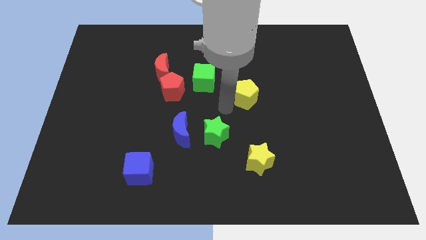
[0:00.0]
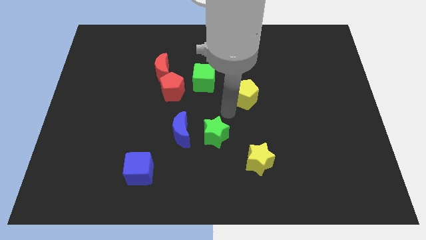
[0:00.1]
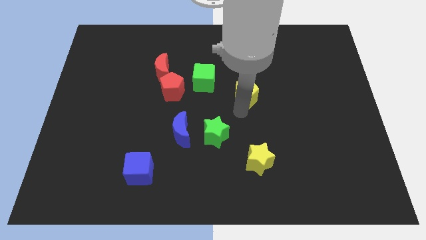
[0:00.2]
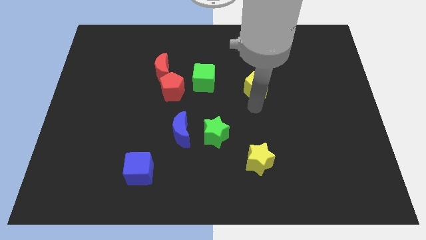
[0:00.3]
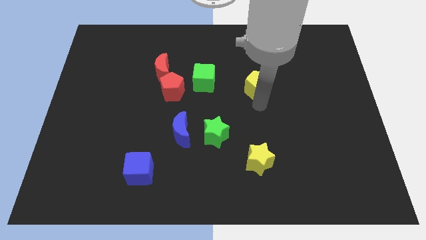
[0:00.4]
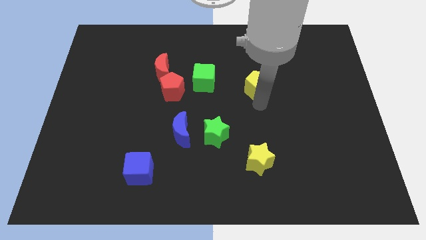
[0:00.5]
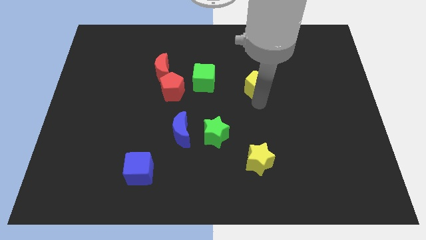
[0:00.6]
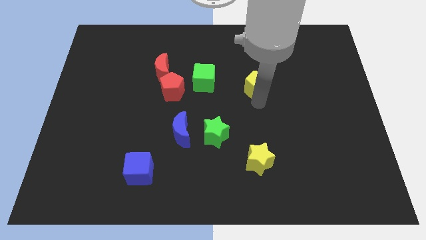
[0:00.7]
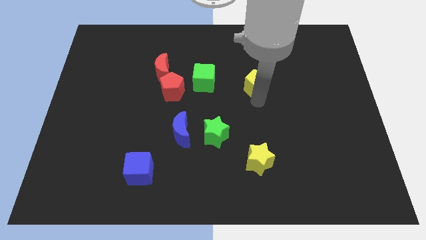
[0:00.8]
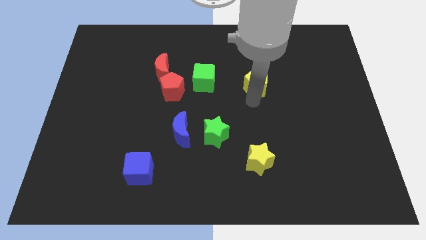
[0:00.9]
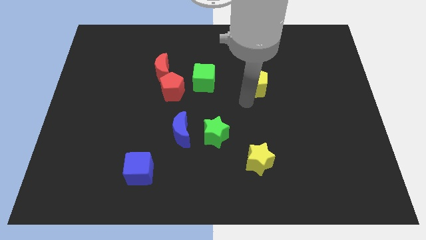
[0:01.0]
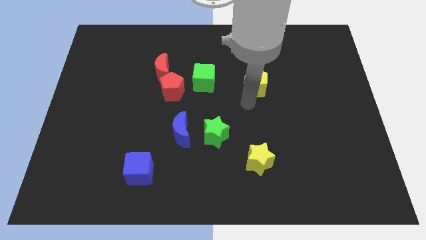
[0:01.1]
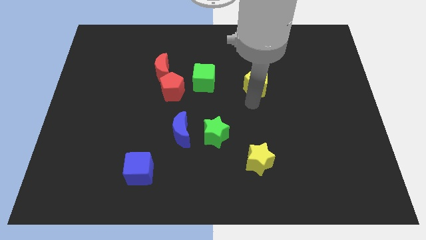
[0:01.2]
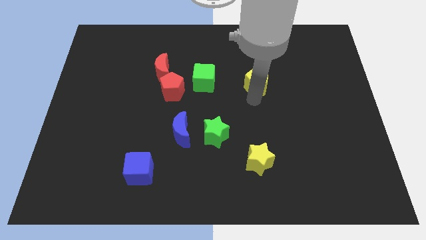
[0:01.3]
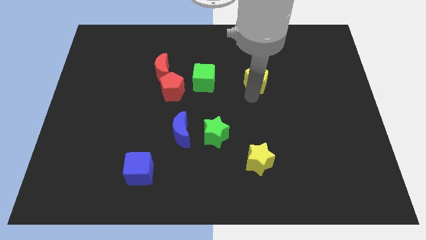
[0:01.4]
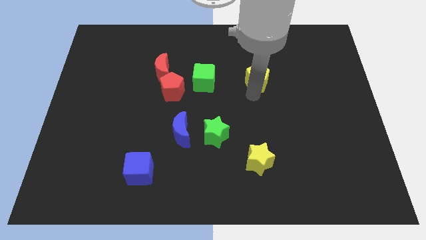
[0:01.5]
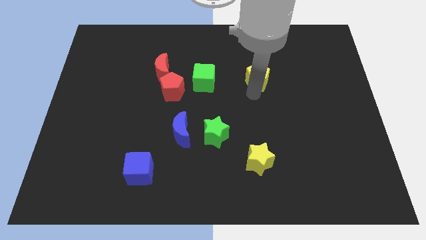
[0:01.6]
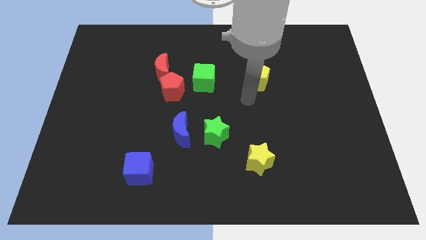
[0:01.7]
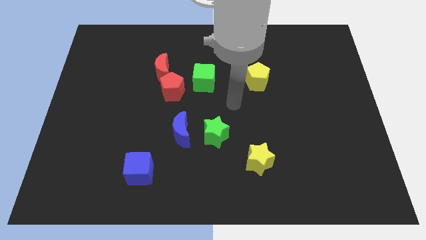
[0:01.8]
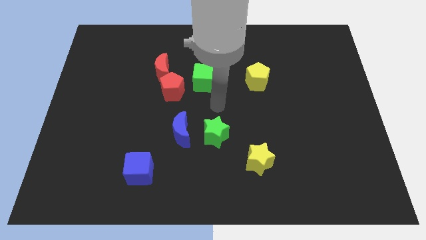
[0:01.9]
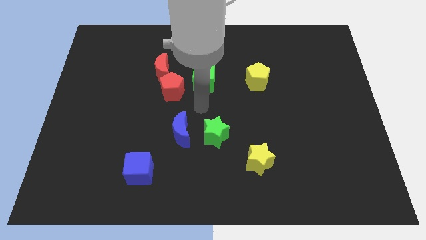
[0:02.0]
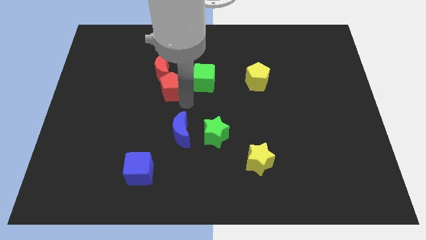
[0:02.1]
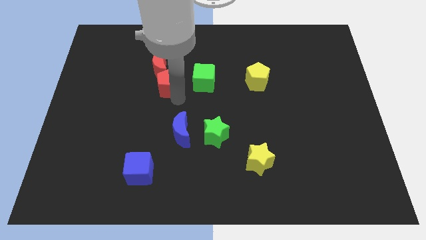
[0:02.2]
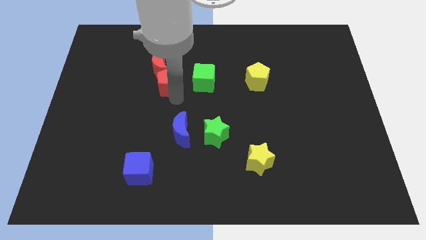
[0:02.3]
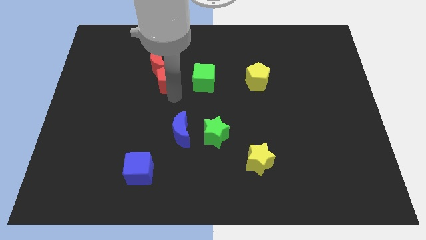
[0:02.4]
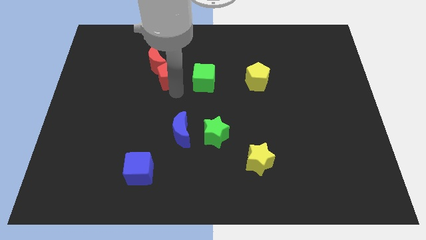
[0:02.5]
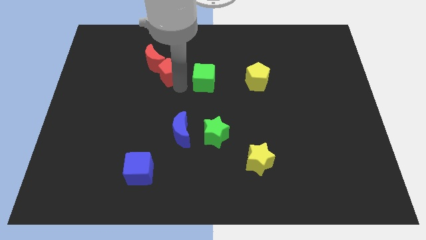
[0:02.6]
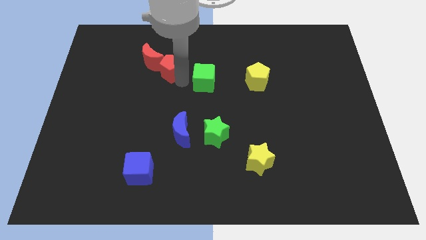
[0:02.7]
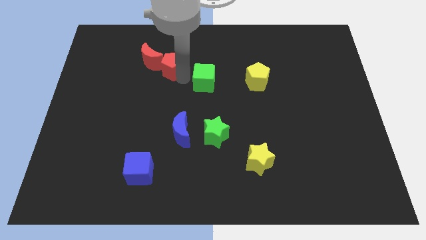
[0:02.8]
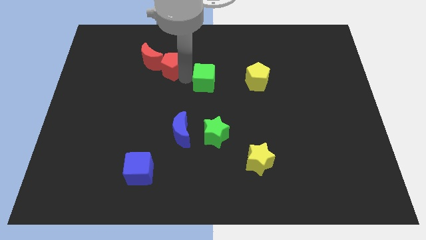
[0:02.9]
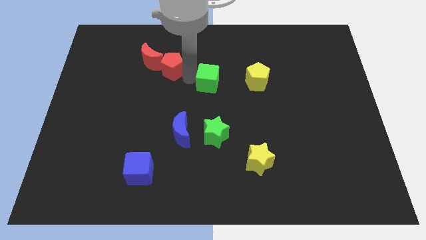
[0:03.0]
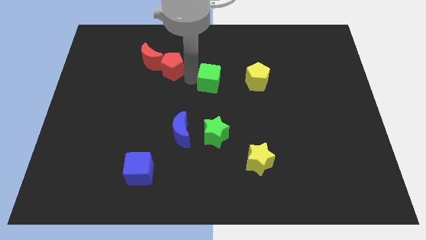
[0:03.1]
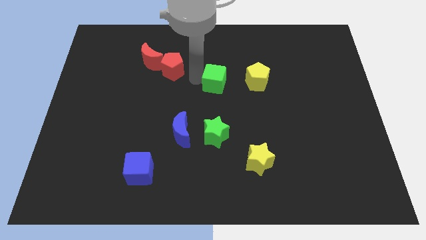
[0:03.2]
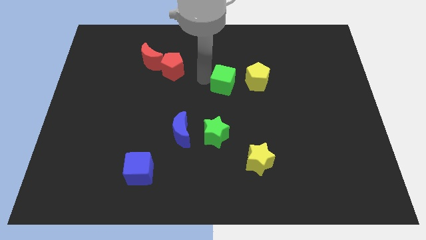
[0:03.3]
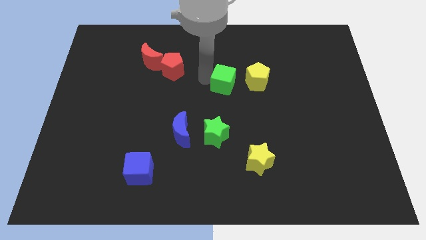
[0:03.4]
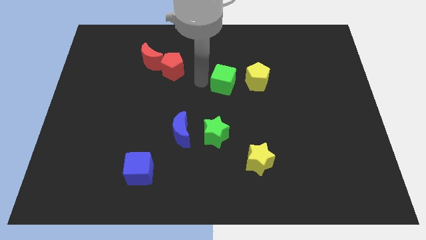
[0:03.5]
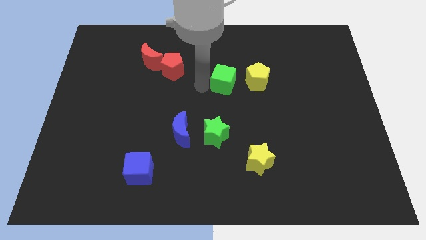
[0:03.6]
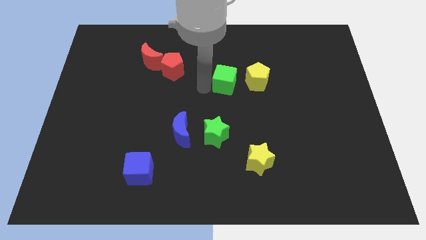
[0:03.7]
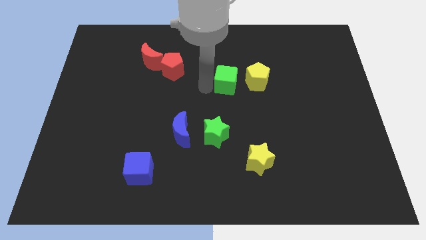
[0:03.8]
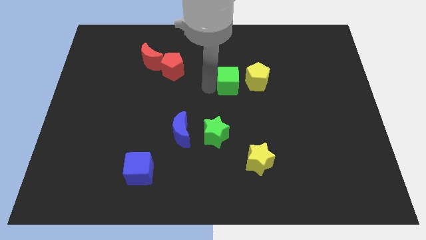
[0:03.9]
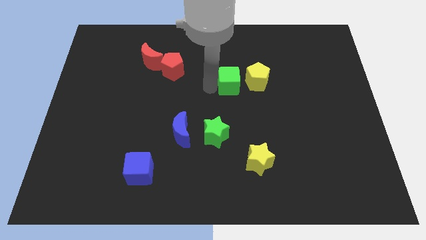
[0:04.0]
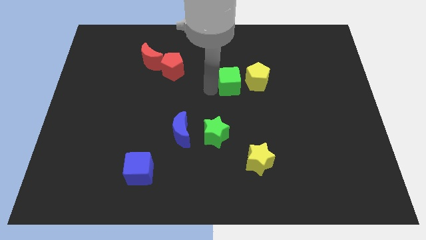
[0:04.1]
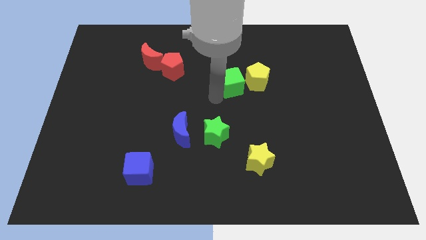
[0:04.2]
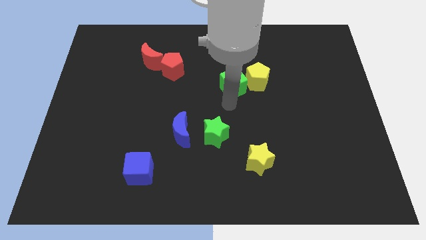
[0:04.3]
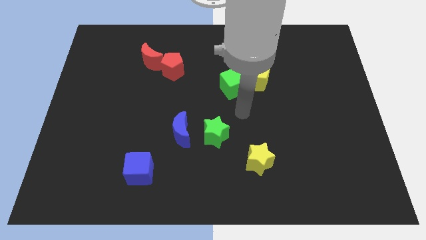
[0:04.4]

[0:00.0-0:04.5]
push the green cube towards the yellow pentagon

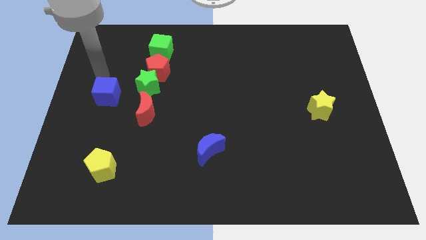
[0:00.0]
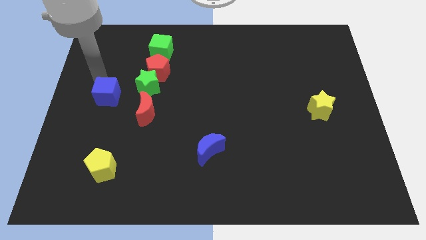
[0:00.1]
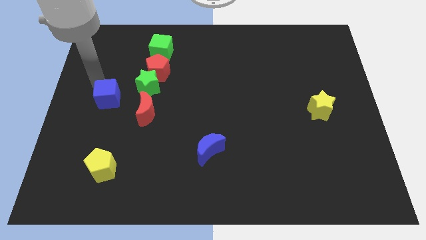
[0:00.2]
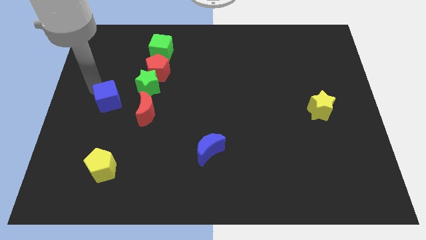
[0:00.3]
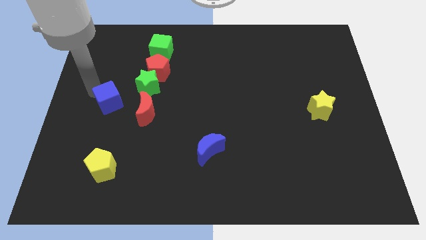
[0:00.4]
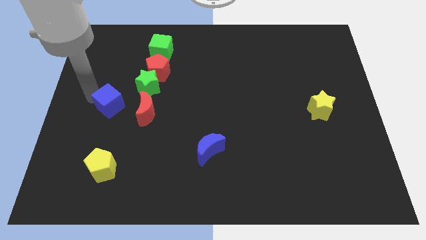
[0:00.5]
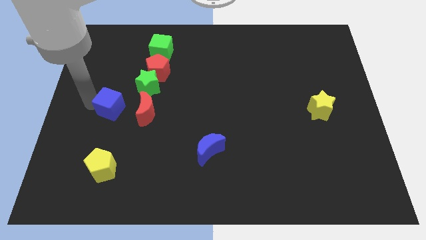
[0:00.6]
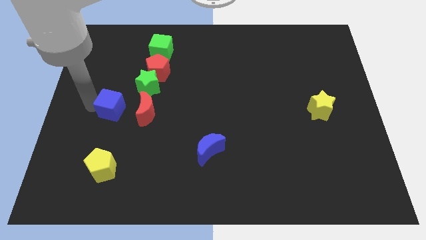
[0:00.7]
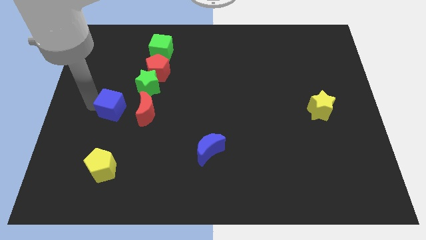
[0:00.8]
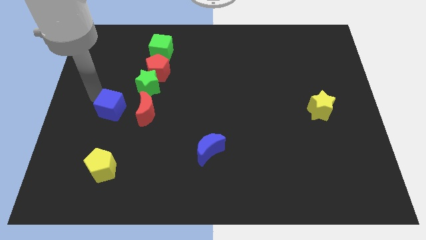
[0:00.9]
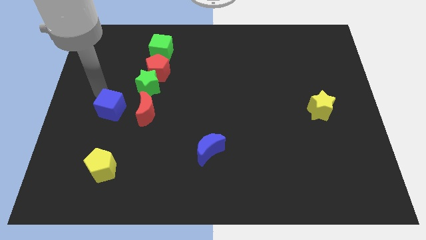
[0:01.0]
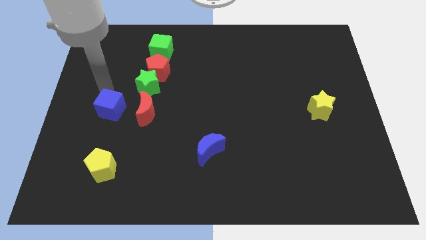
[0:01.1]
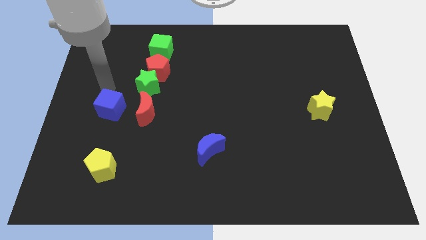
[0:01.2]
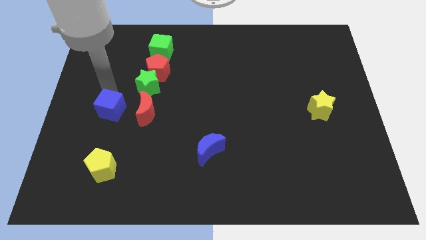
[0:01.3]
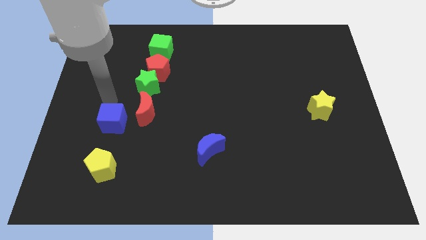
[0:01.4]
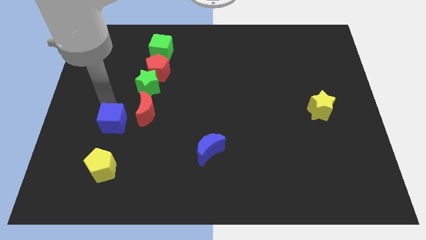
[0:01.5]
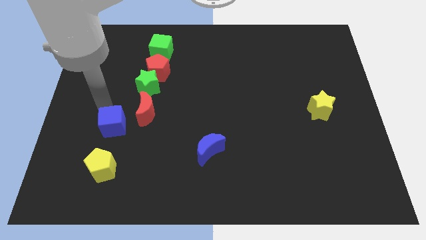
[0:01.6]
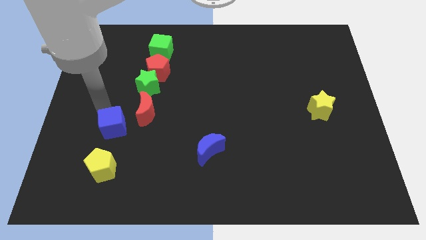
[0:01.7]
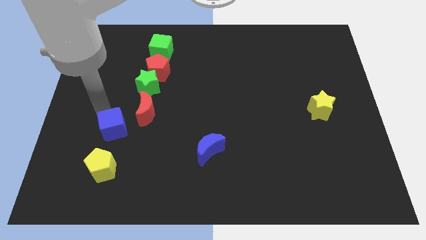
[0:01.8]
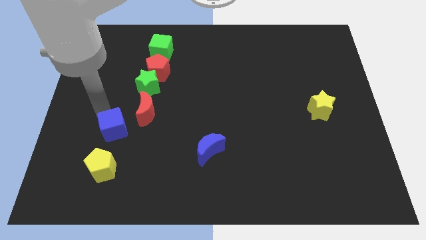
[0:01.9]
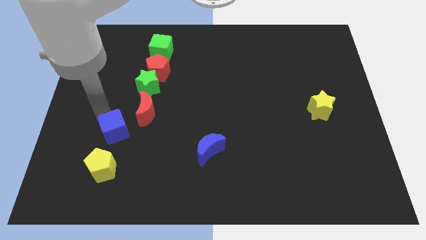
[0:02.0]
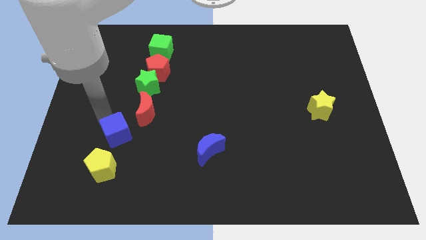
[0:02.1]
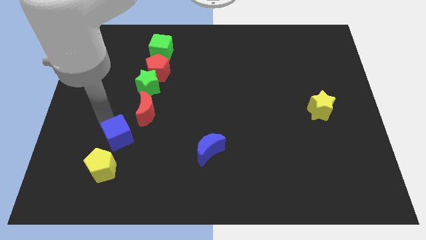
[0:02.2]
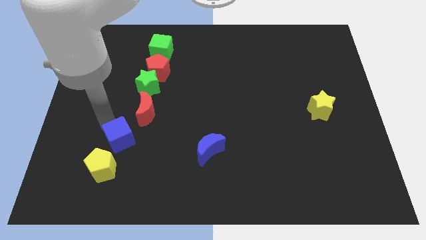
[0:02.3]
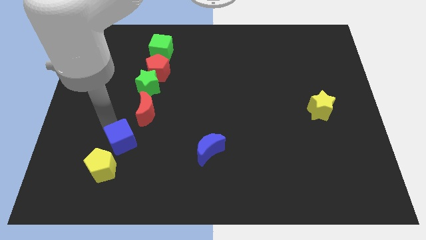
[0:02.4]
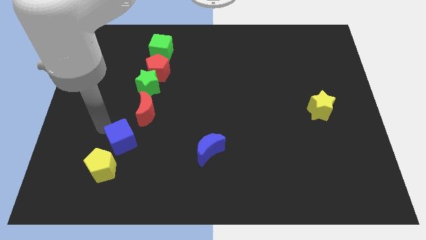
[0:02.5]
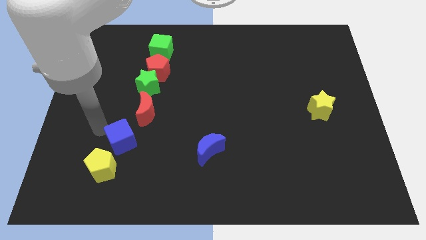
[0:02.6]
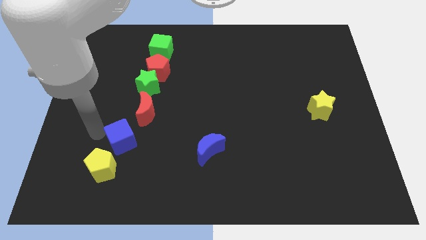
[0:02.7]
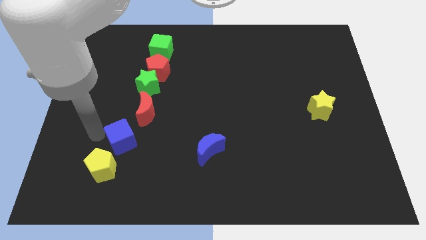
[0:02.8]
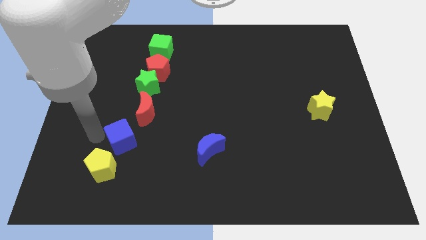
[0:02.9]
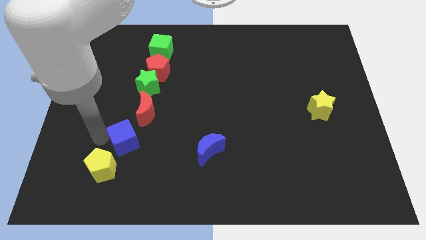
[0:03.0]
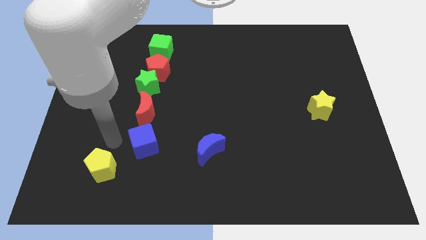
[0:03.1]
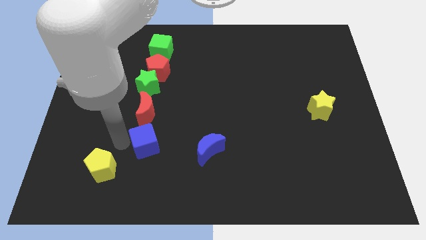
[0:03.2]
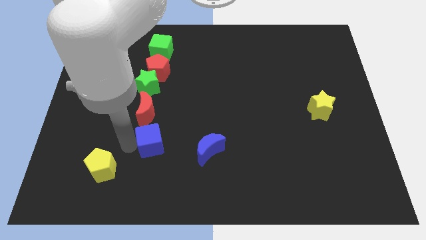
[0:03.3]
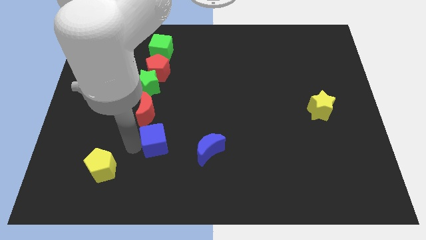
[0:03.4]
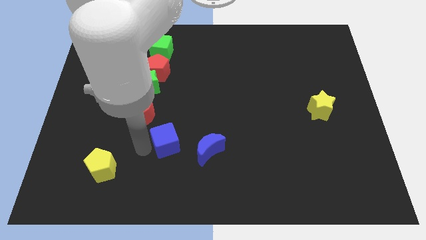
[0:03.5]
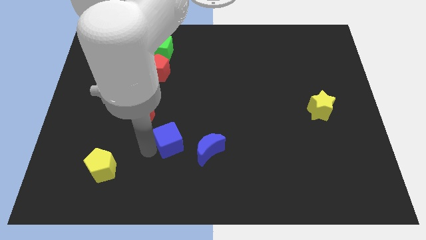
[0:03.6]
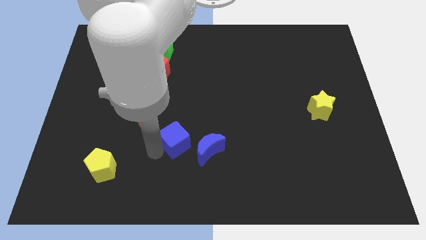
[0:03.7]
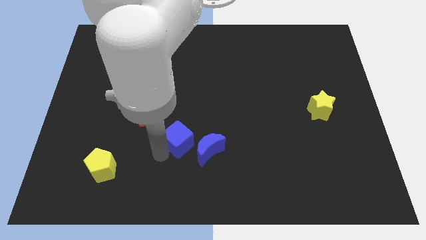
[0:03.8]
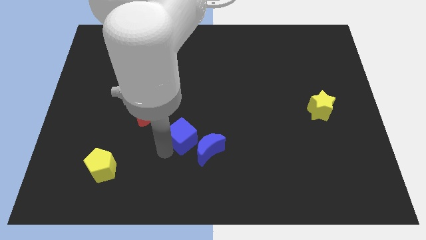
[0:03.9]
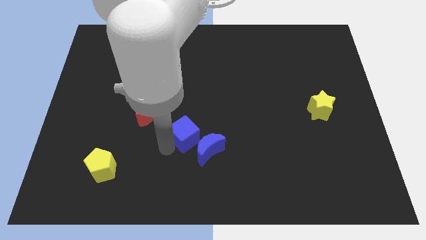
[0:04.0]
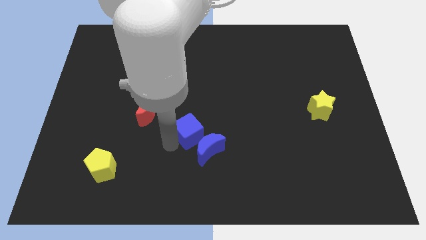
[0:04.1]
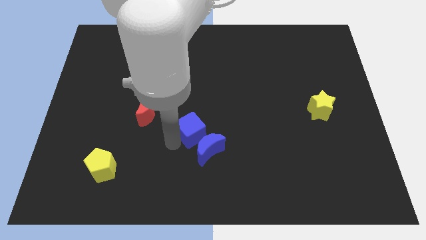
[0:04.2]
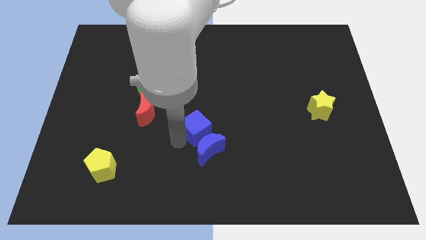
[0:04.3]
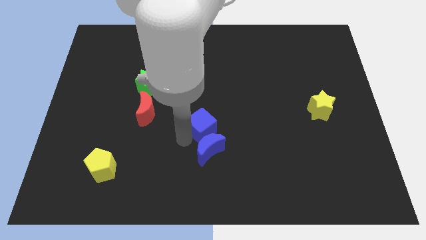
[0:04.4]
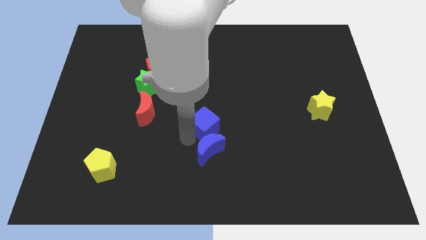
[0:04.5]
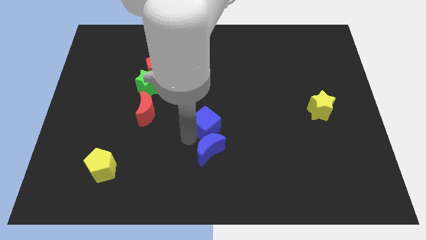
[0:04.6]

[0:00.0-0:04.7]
place the blue cube above the blue moon
